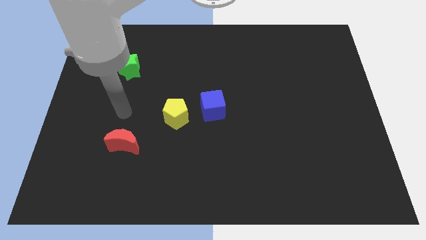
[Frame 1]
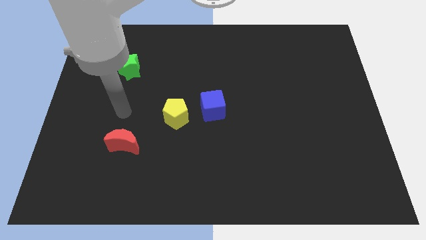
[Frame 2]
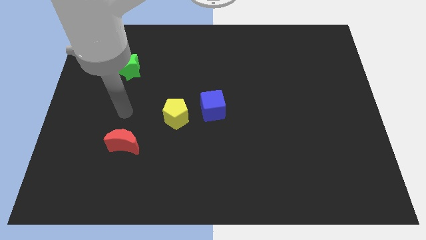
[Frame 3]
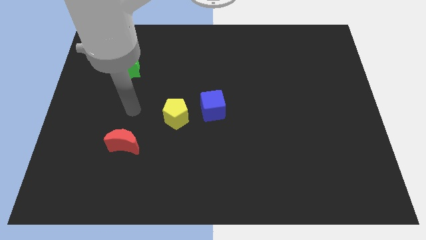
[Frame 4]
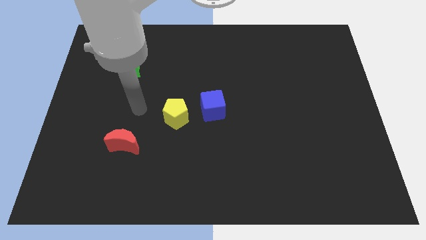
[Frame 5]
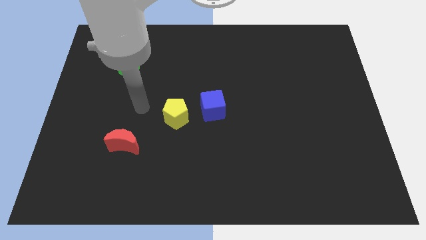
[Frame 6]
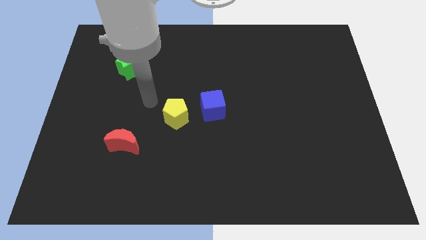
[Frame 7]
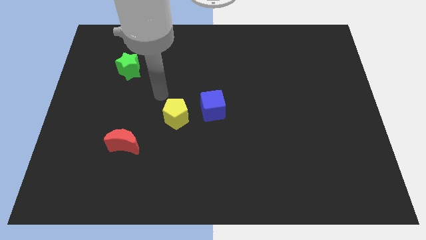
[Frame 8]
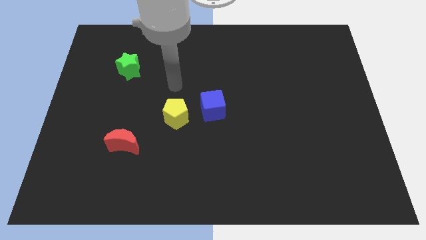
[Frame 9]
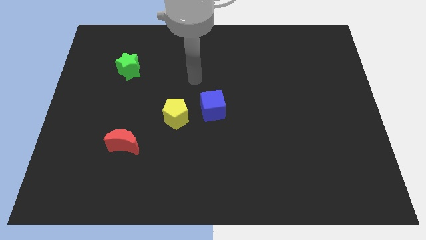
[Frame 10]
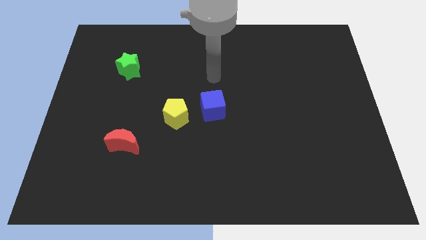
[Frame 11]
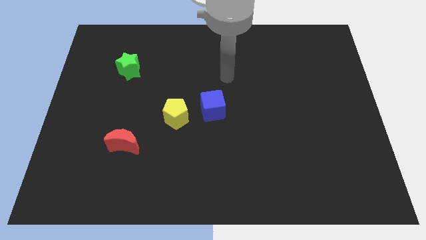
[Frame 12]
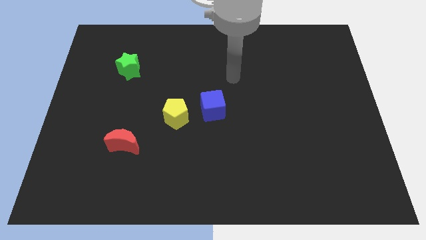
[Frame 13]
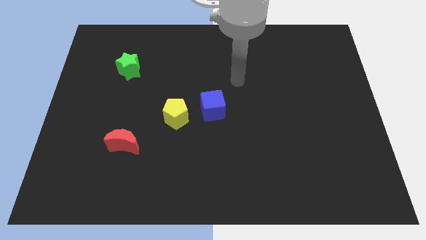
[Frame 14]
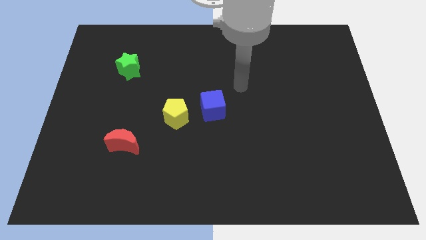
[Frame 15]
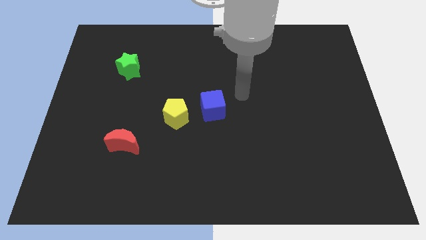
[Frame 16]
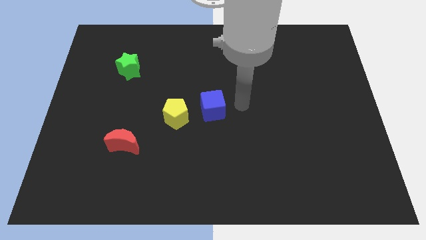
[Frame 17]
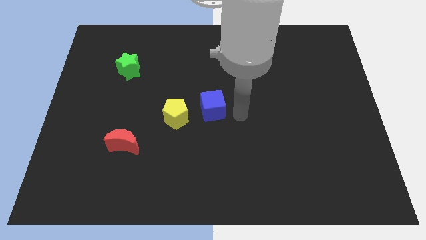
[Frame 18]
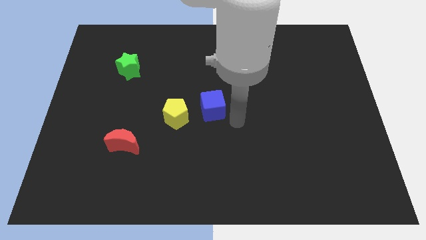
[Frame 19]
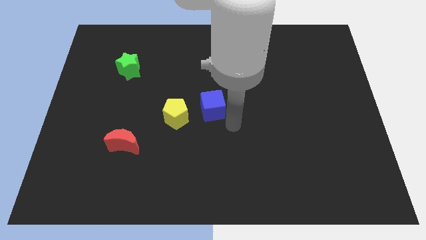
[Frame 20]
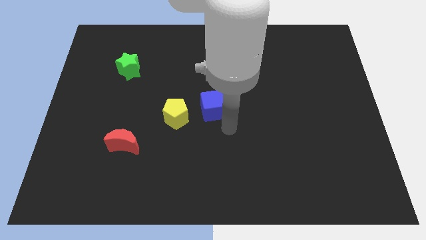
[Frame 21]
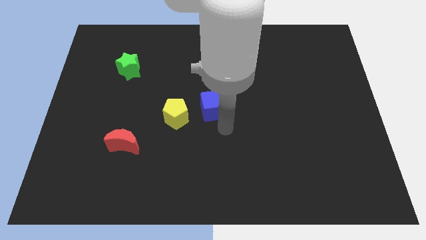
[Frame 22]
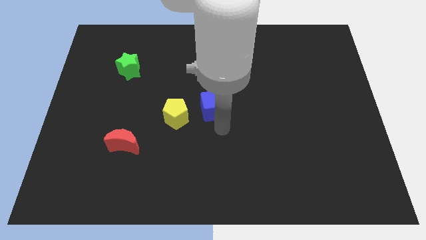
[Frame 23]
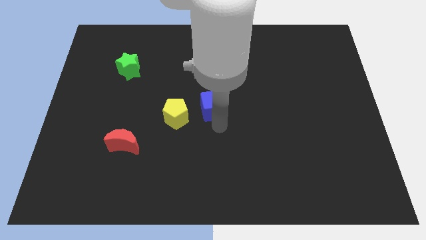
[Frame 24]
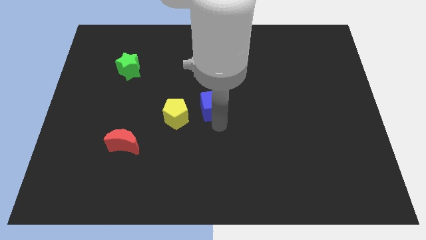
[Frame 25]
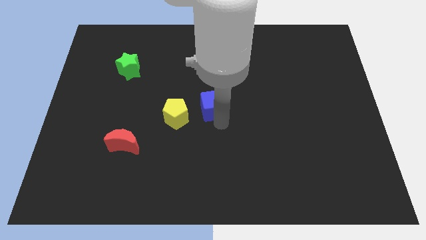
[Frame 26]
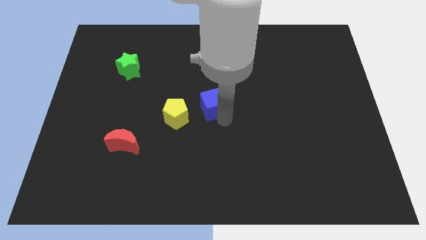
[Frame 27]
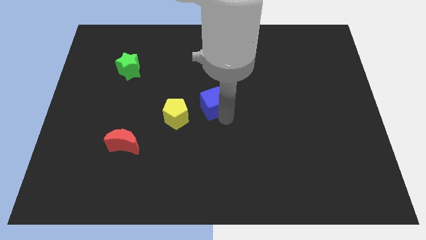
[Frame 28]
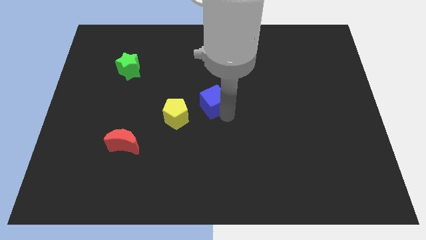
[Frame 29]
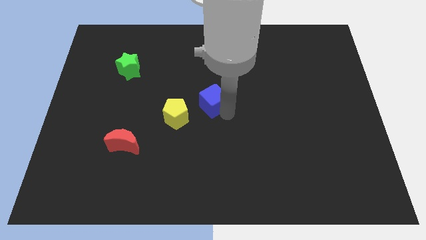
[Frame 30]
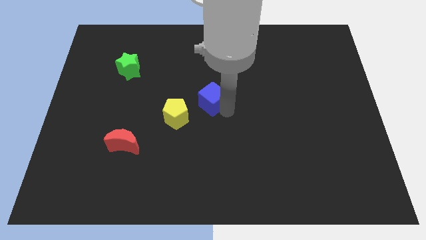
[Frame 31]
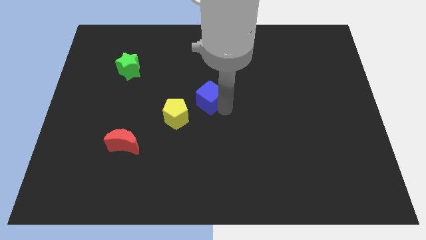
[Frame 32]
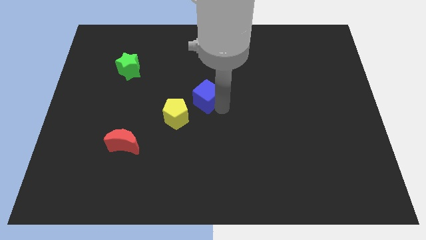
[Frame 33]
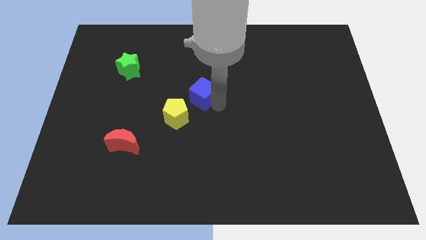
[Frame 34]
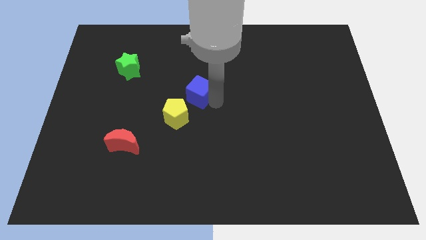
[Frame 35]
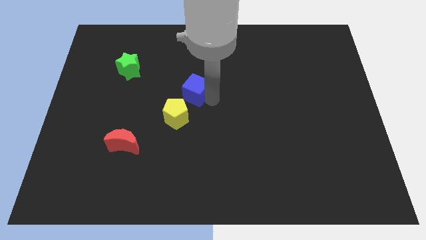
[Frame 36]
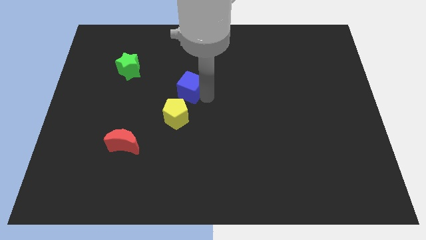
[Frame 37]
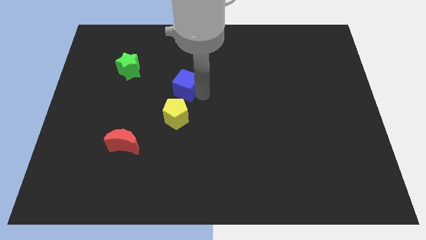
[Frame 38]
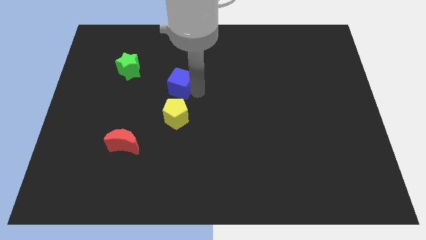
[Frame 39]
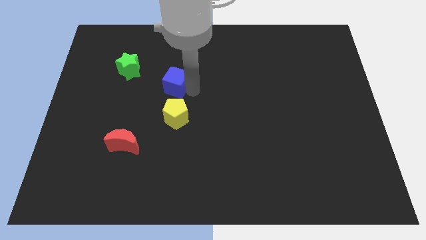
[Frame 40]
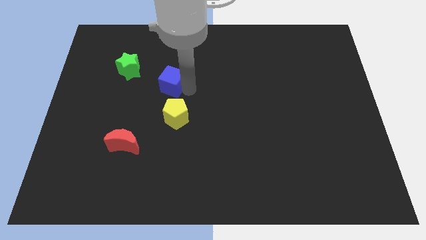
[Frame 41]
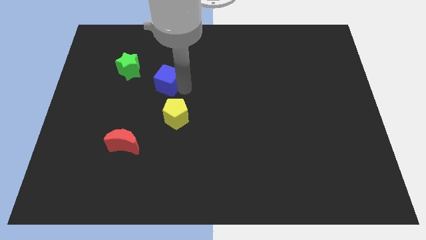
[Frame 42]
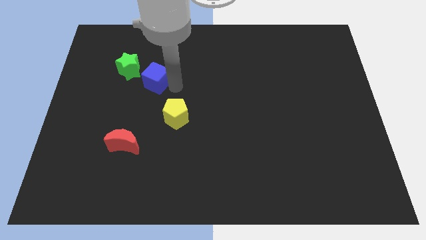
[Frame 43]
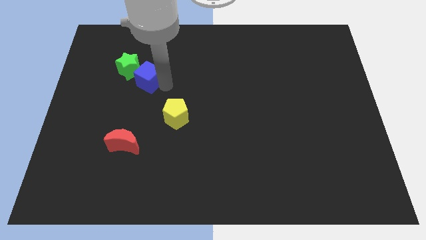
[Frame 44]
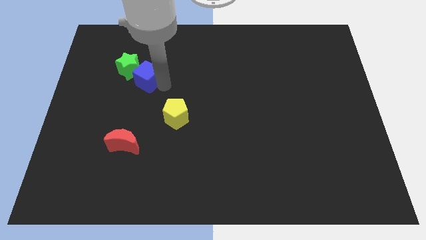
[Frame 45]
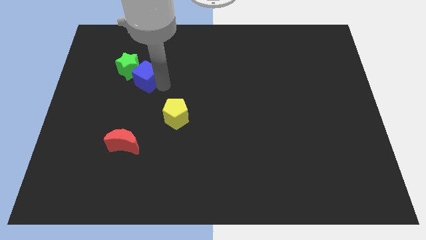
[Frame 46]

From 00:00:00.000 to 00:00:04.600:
slide the cube next to the green block

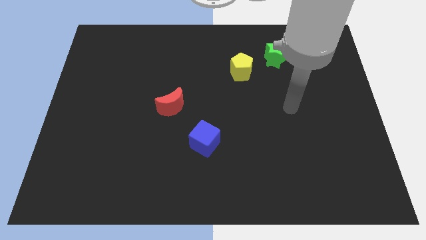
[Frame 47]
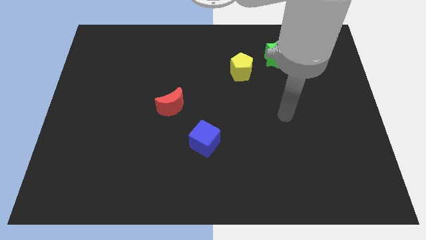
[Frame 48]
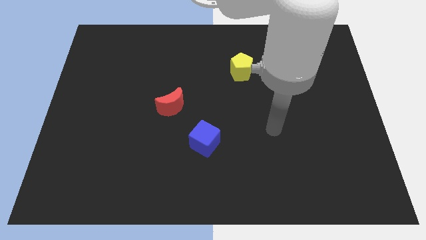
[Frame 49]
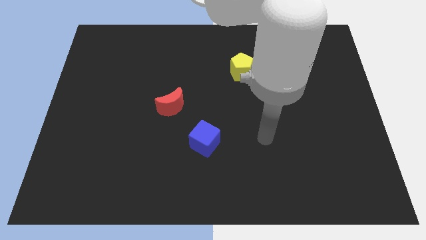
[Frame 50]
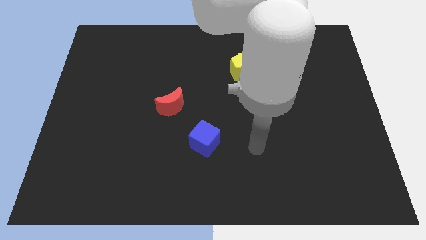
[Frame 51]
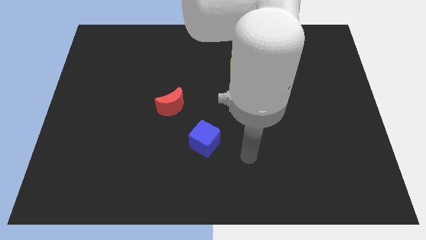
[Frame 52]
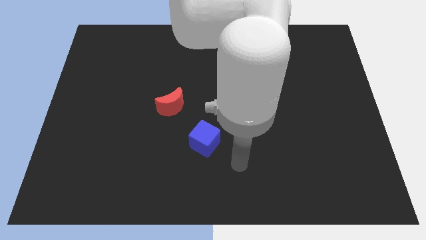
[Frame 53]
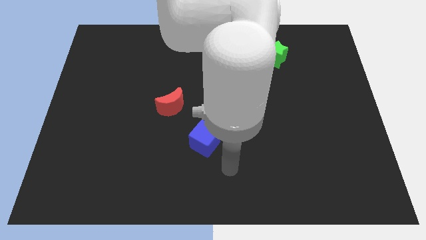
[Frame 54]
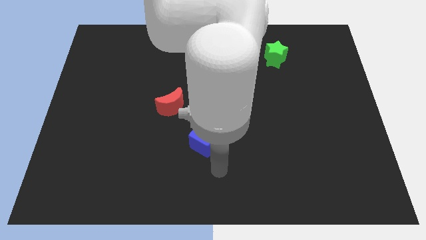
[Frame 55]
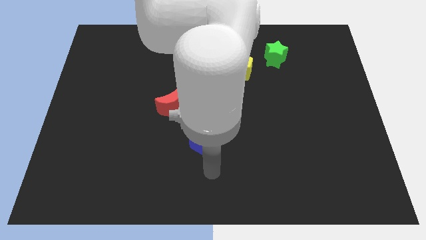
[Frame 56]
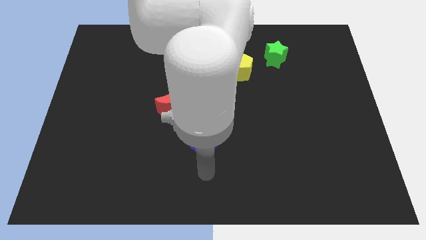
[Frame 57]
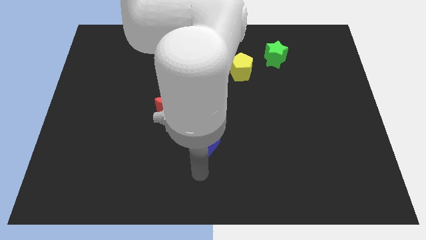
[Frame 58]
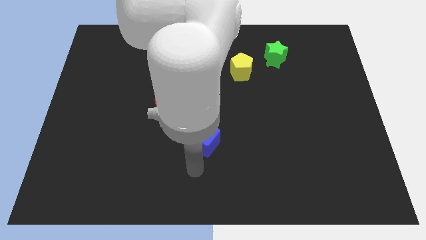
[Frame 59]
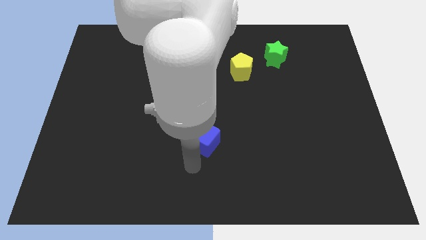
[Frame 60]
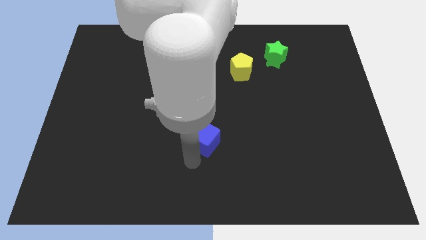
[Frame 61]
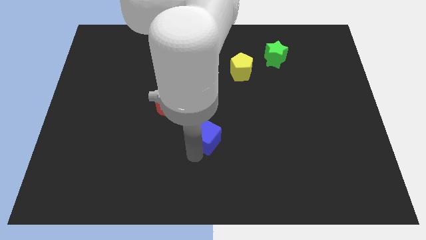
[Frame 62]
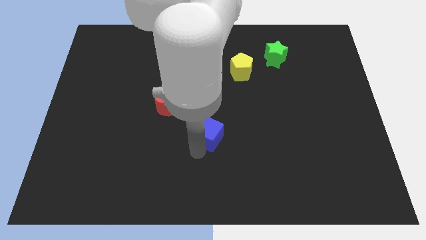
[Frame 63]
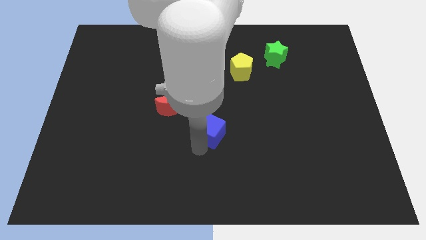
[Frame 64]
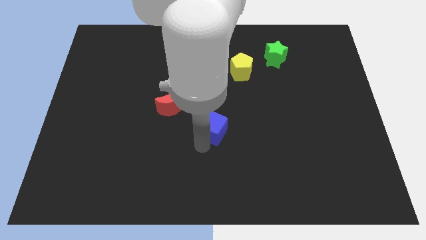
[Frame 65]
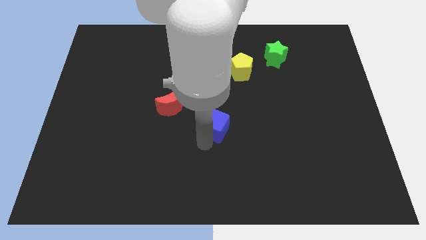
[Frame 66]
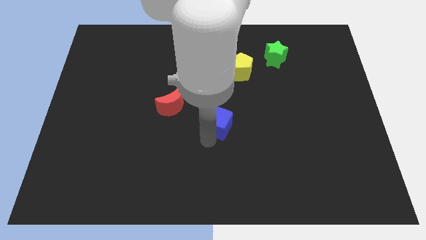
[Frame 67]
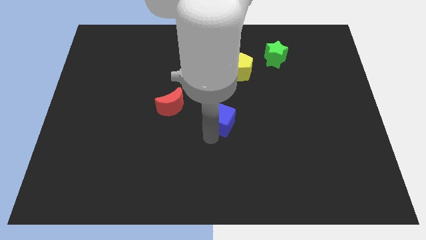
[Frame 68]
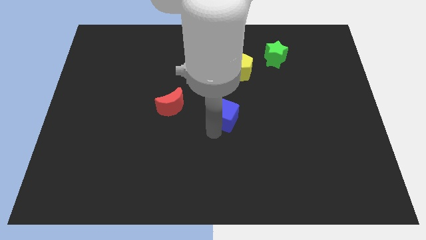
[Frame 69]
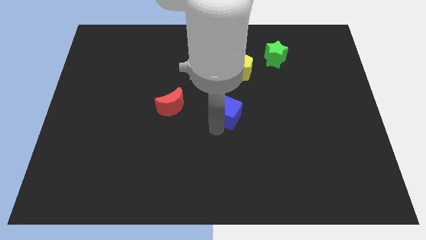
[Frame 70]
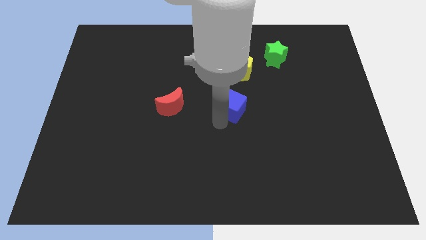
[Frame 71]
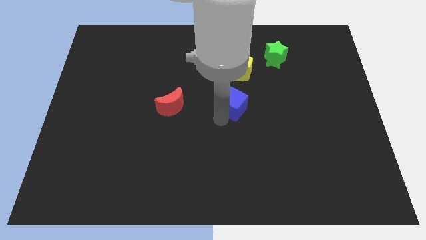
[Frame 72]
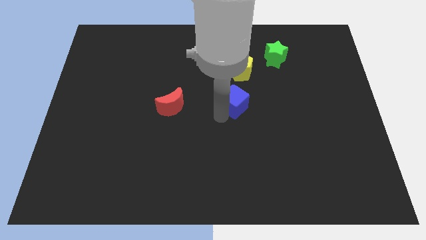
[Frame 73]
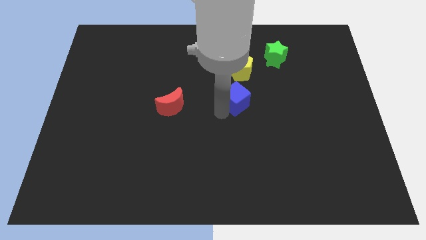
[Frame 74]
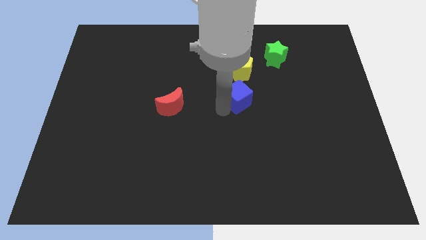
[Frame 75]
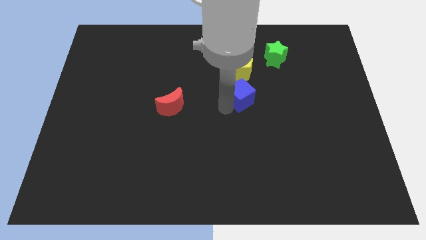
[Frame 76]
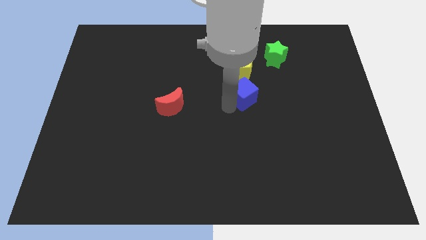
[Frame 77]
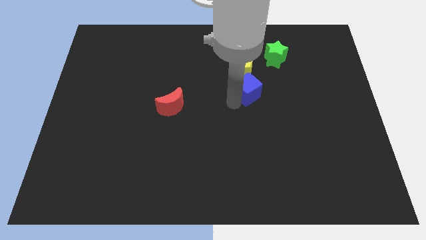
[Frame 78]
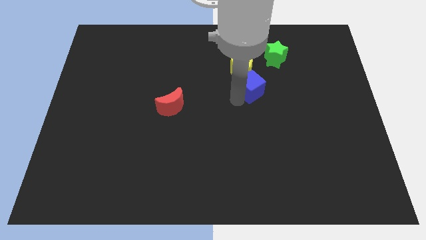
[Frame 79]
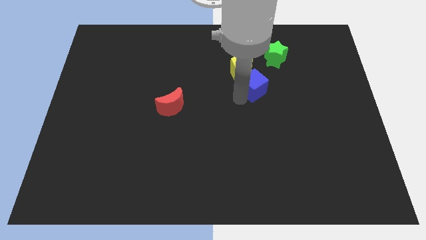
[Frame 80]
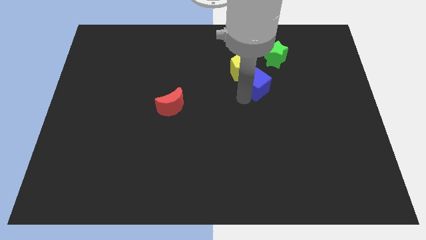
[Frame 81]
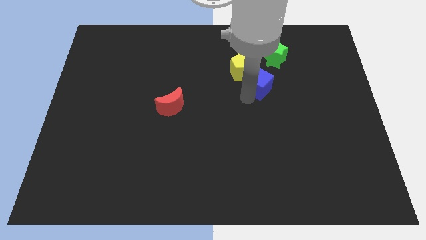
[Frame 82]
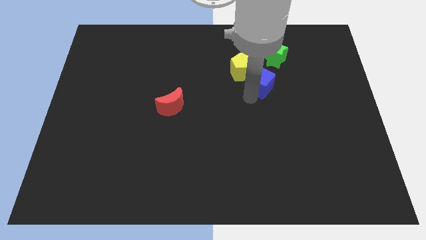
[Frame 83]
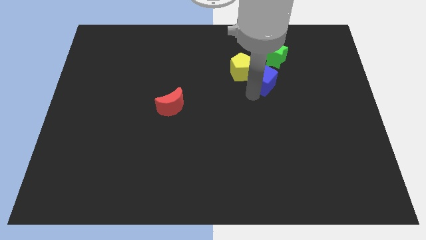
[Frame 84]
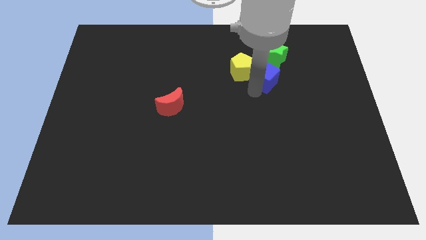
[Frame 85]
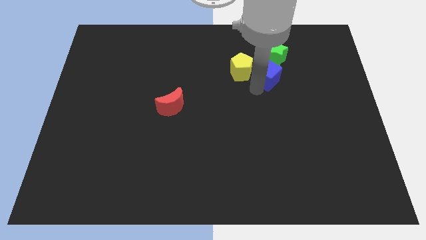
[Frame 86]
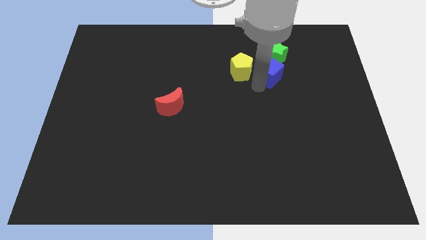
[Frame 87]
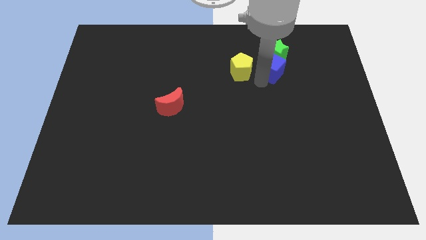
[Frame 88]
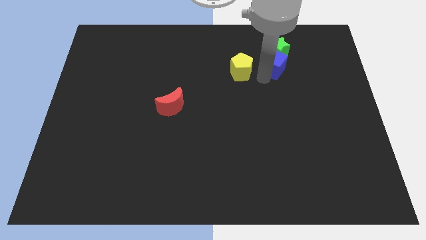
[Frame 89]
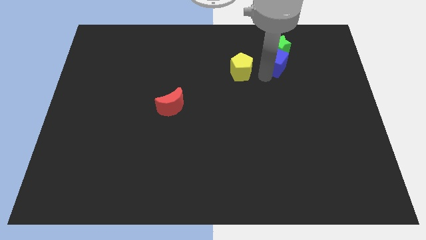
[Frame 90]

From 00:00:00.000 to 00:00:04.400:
move the cube next to the green star
